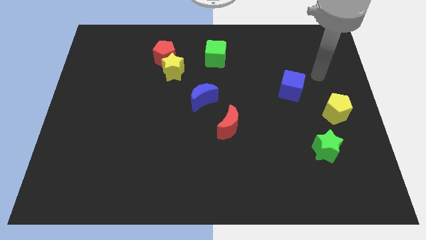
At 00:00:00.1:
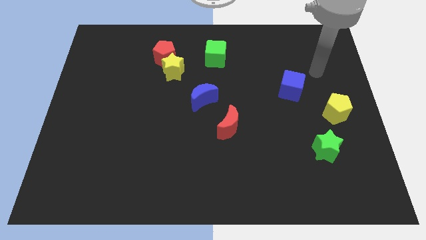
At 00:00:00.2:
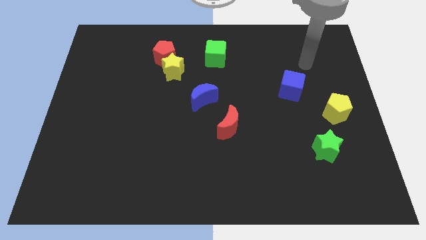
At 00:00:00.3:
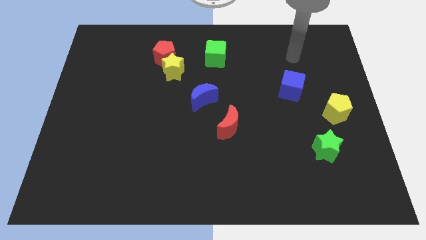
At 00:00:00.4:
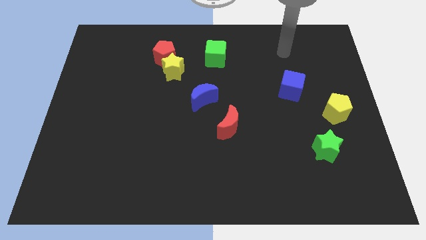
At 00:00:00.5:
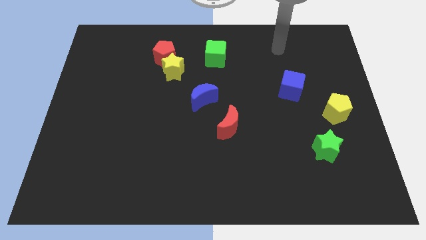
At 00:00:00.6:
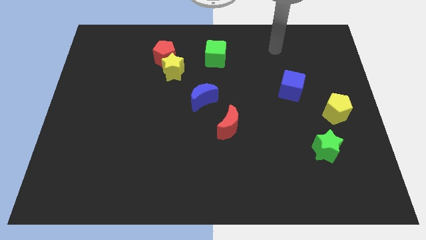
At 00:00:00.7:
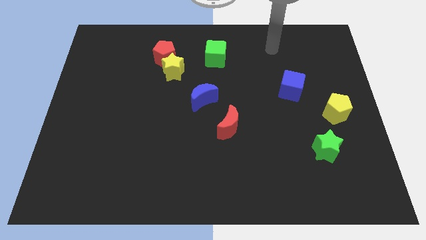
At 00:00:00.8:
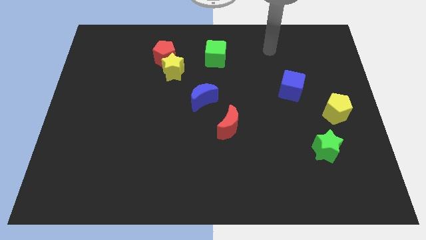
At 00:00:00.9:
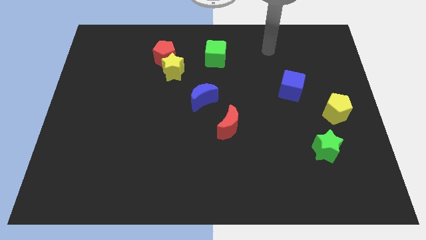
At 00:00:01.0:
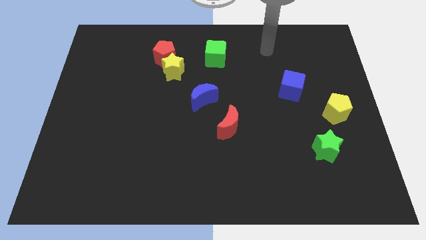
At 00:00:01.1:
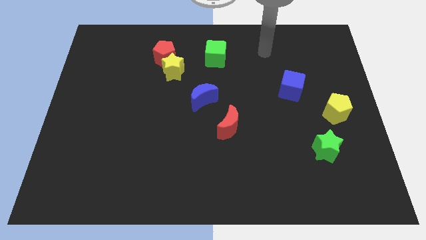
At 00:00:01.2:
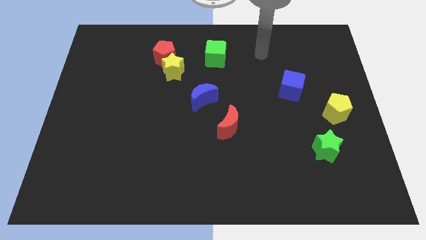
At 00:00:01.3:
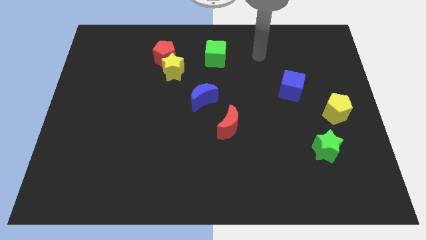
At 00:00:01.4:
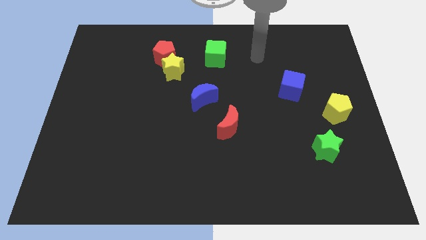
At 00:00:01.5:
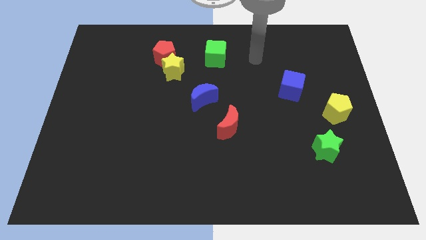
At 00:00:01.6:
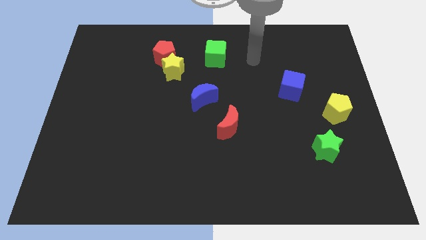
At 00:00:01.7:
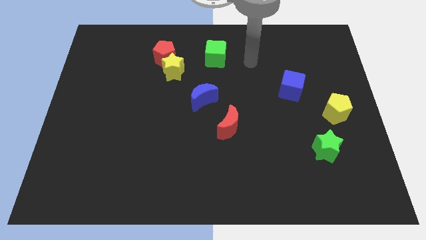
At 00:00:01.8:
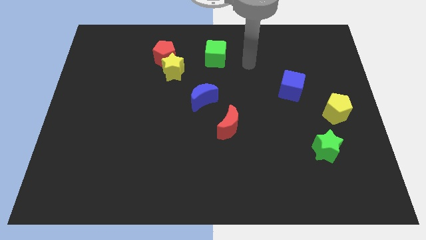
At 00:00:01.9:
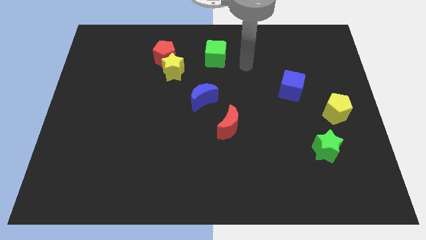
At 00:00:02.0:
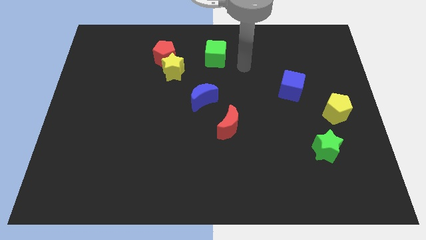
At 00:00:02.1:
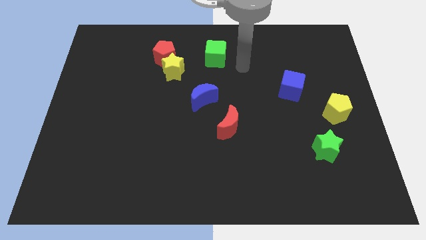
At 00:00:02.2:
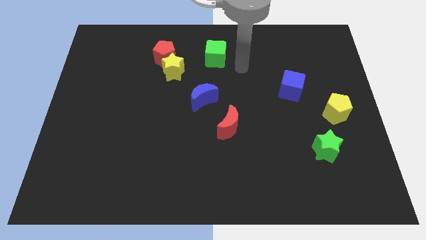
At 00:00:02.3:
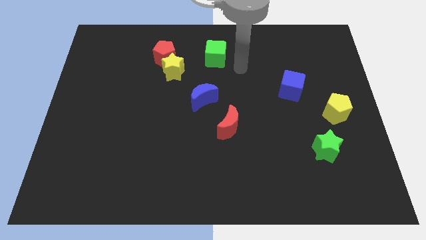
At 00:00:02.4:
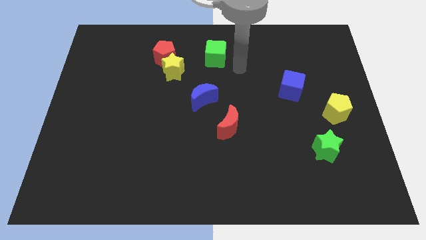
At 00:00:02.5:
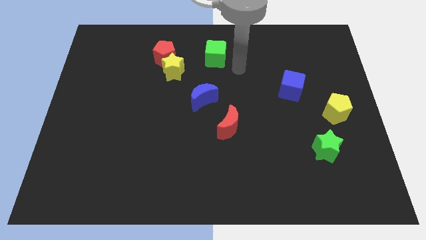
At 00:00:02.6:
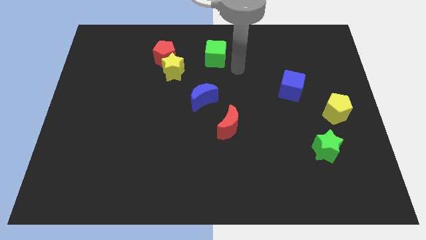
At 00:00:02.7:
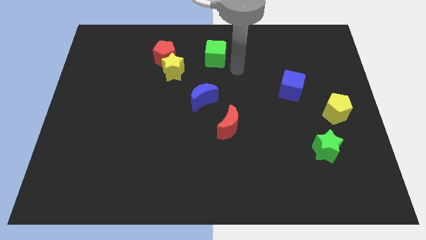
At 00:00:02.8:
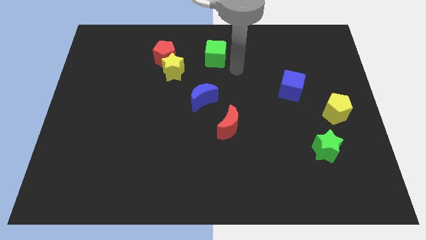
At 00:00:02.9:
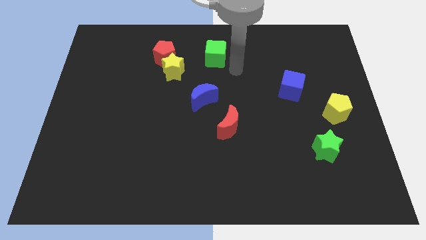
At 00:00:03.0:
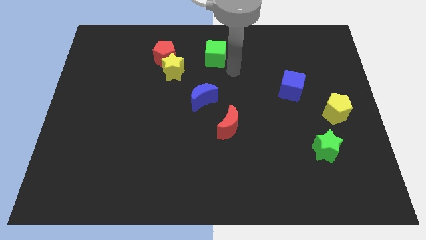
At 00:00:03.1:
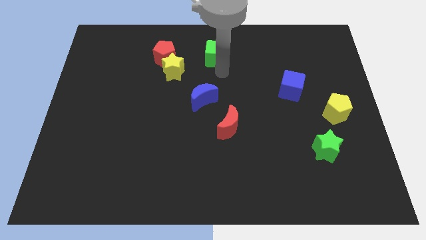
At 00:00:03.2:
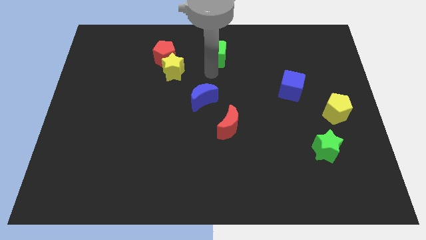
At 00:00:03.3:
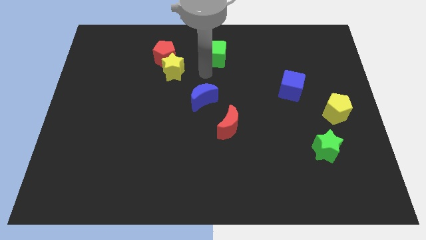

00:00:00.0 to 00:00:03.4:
move your hand in between green cube and blue crescent

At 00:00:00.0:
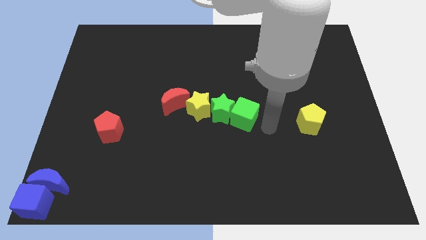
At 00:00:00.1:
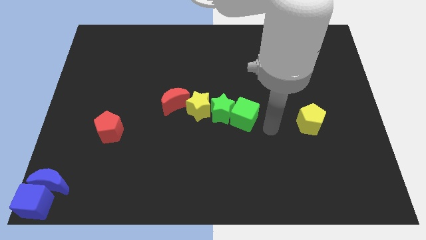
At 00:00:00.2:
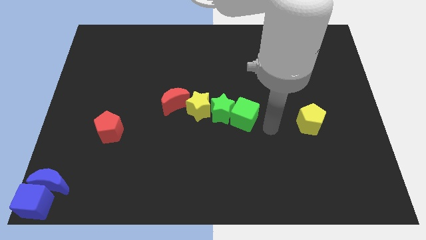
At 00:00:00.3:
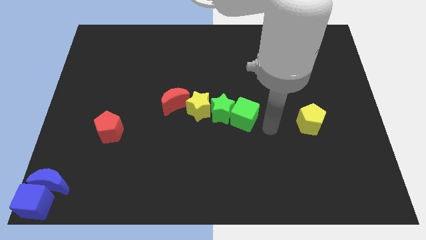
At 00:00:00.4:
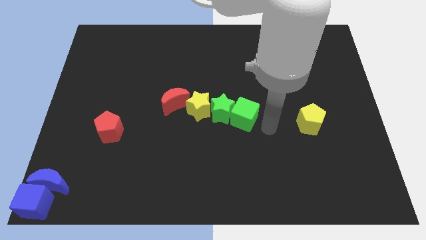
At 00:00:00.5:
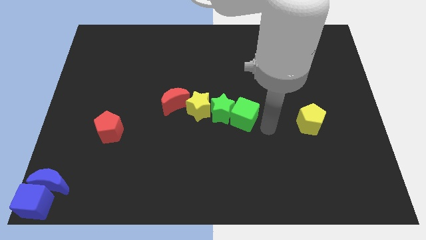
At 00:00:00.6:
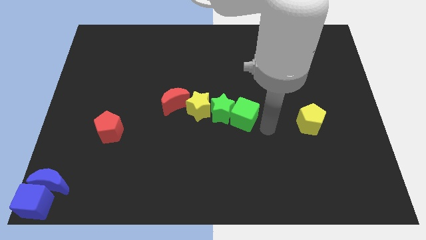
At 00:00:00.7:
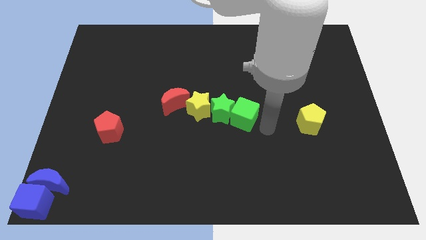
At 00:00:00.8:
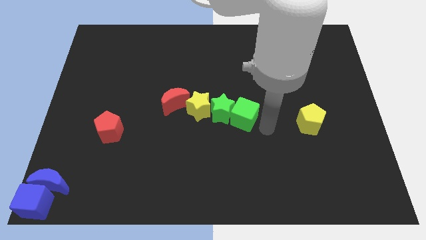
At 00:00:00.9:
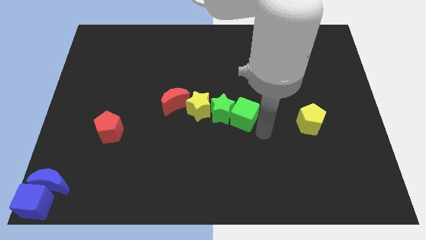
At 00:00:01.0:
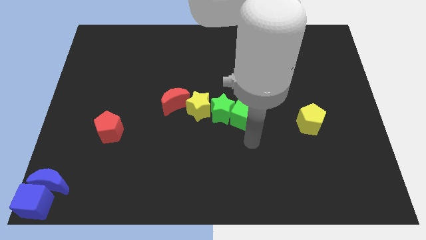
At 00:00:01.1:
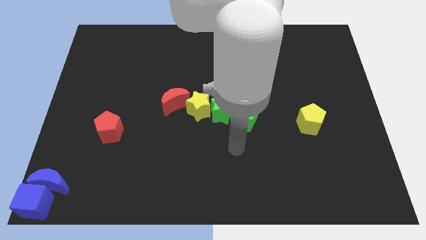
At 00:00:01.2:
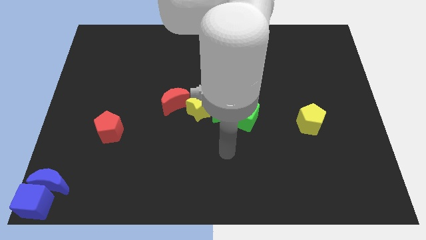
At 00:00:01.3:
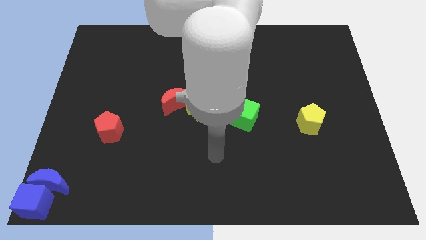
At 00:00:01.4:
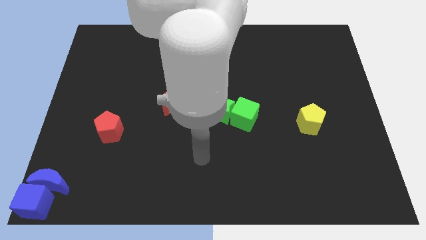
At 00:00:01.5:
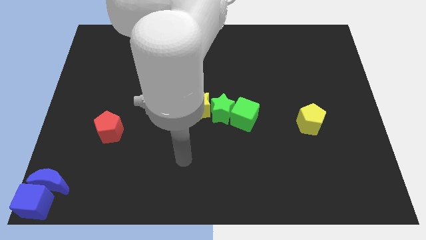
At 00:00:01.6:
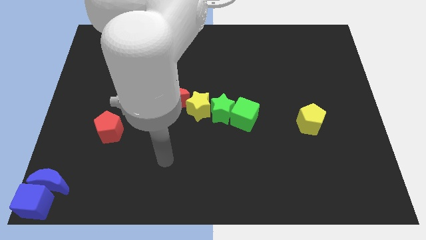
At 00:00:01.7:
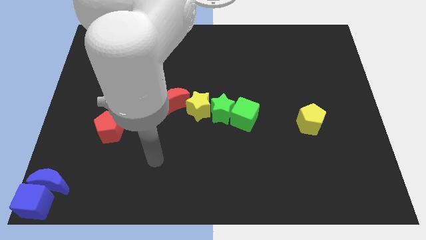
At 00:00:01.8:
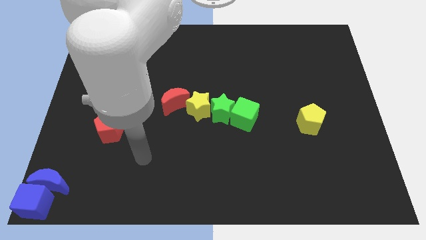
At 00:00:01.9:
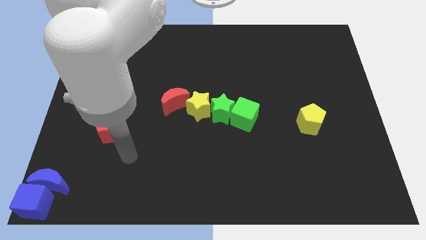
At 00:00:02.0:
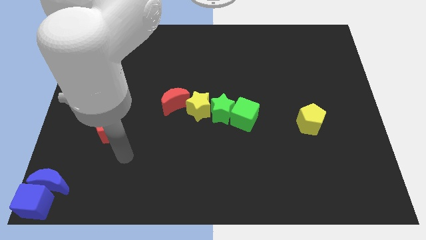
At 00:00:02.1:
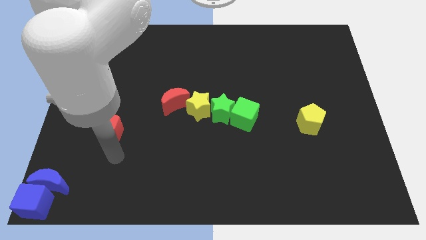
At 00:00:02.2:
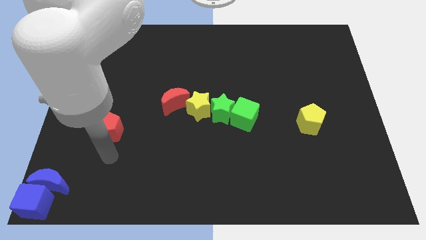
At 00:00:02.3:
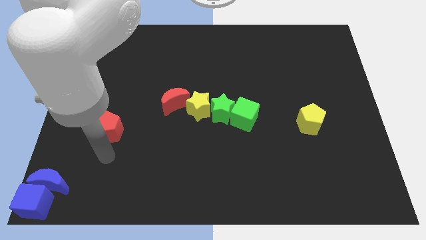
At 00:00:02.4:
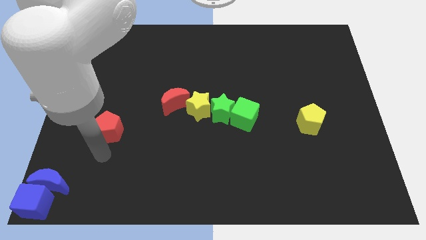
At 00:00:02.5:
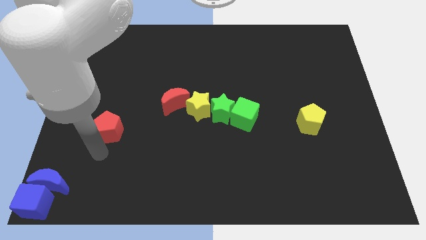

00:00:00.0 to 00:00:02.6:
move your arm and point below red pentagon

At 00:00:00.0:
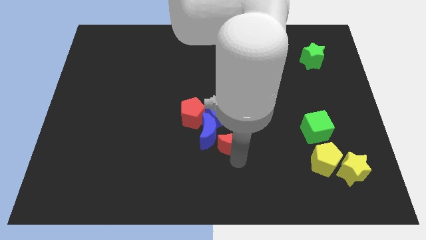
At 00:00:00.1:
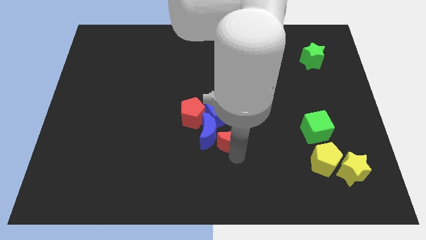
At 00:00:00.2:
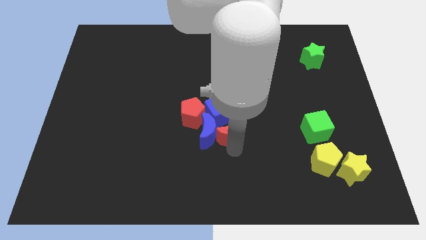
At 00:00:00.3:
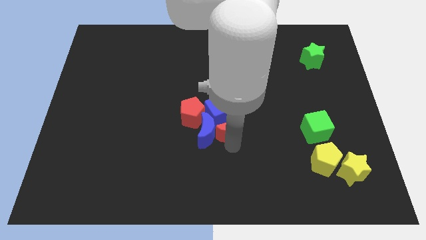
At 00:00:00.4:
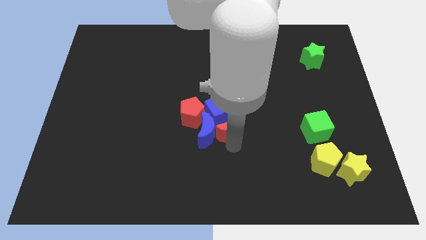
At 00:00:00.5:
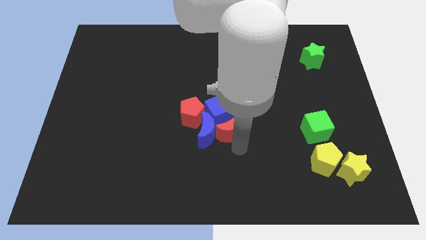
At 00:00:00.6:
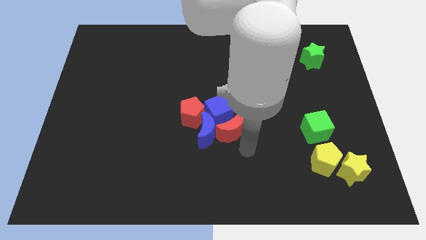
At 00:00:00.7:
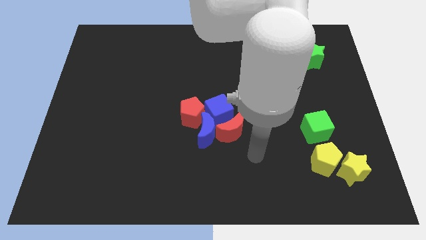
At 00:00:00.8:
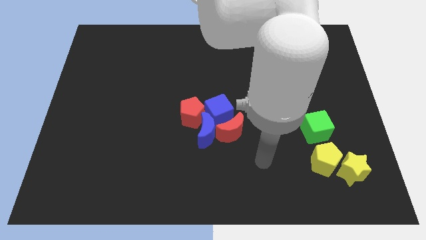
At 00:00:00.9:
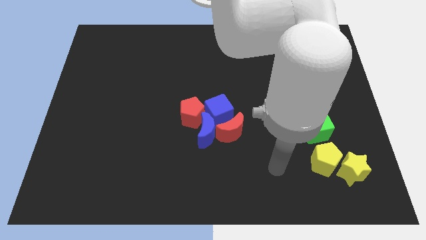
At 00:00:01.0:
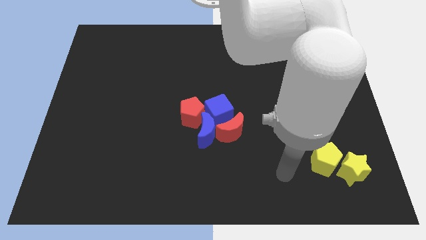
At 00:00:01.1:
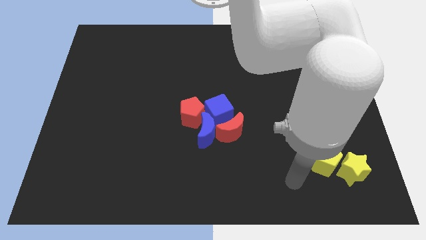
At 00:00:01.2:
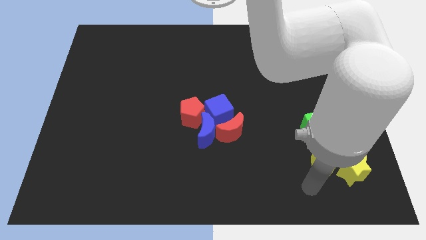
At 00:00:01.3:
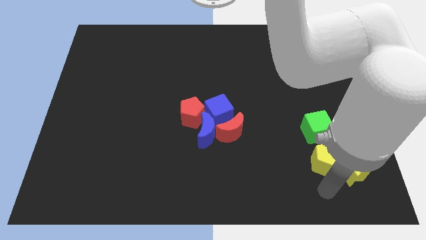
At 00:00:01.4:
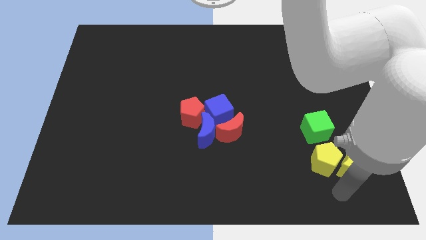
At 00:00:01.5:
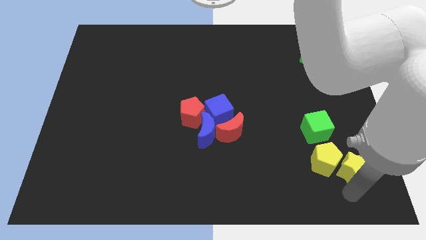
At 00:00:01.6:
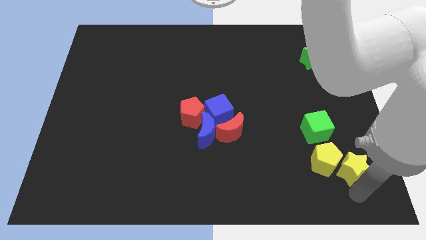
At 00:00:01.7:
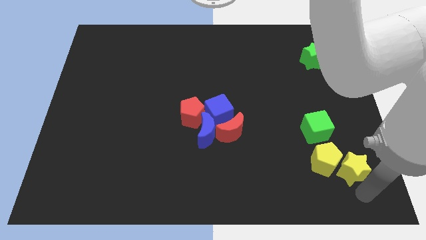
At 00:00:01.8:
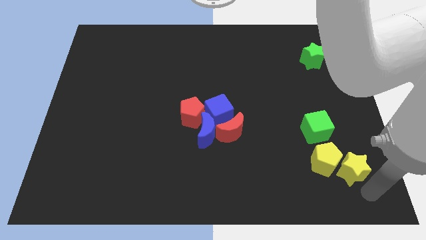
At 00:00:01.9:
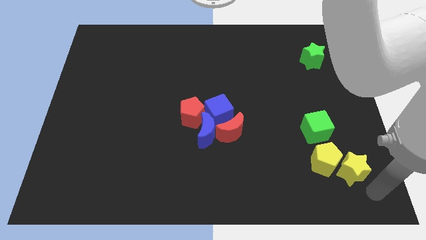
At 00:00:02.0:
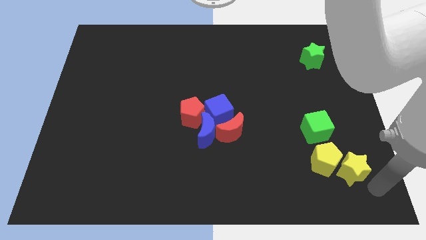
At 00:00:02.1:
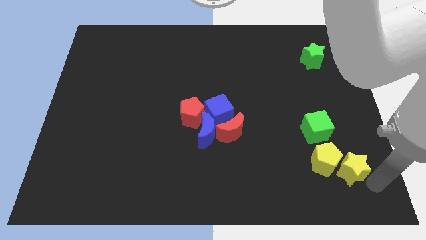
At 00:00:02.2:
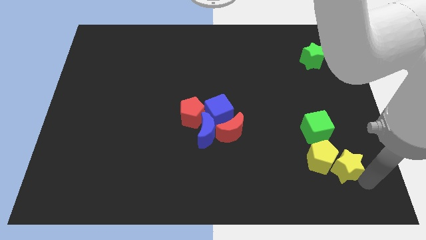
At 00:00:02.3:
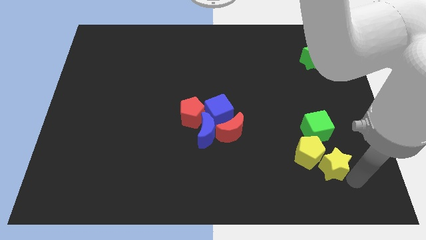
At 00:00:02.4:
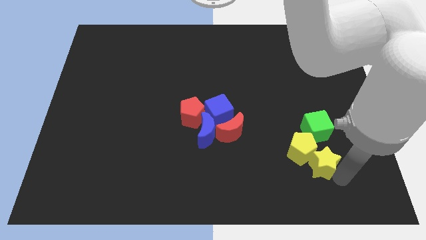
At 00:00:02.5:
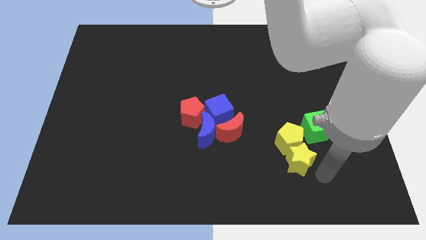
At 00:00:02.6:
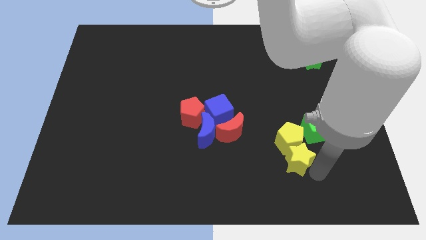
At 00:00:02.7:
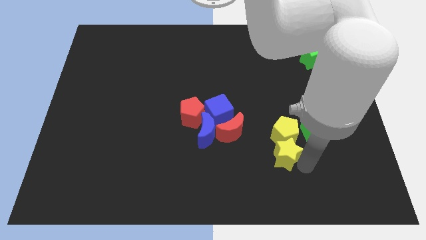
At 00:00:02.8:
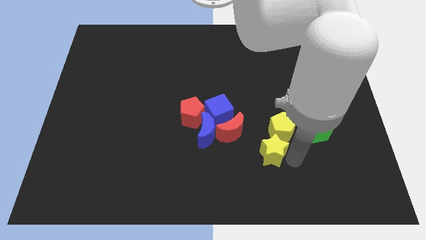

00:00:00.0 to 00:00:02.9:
push yellow star below yellow pentagon
